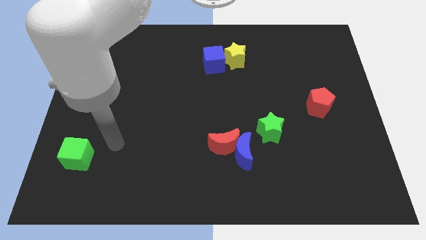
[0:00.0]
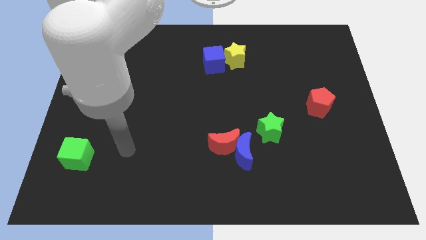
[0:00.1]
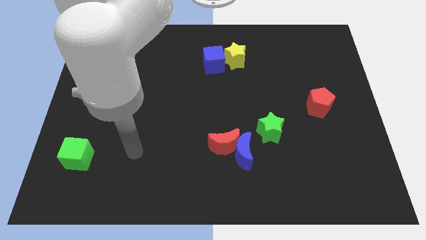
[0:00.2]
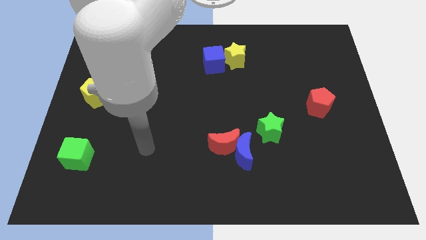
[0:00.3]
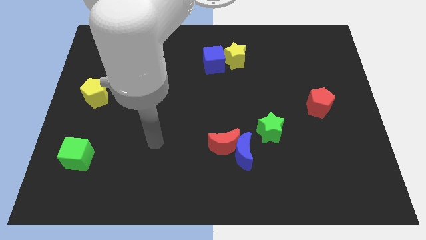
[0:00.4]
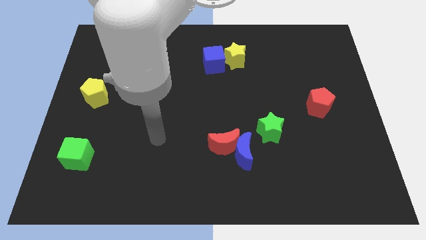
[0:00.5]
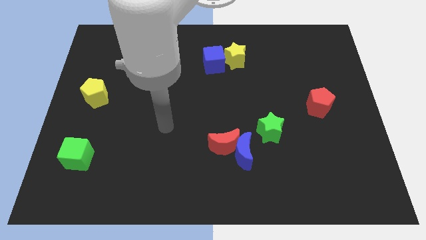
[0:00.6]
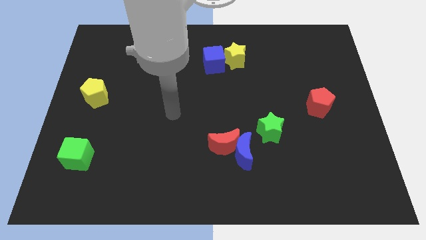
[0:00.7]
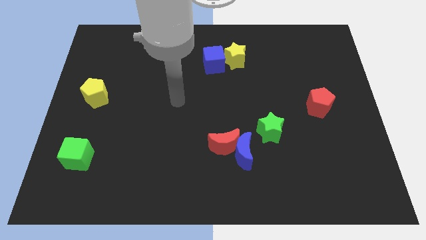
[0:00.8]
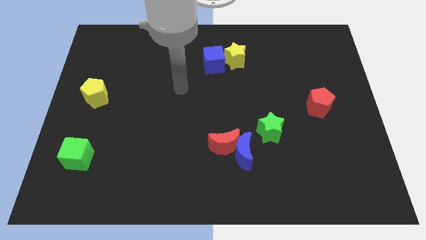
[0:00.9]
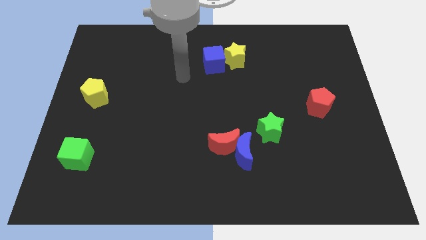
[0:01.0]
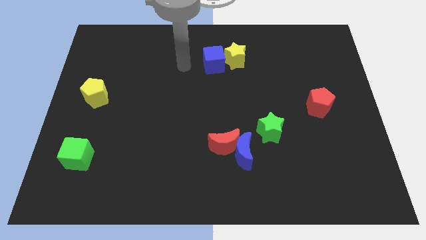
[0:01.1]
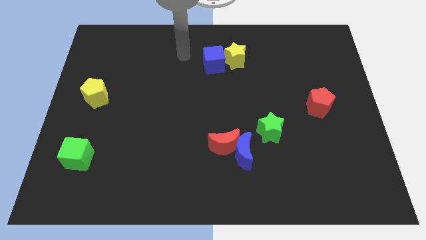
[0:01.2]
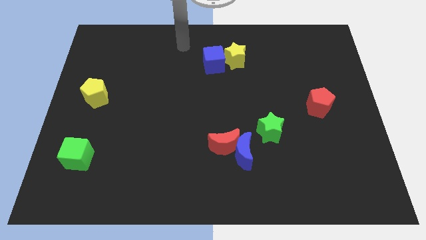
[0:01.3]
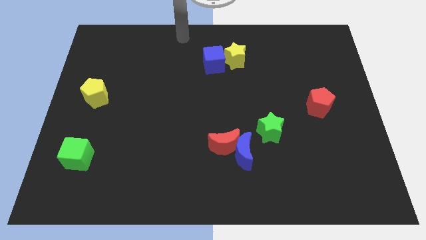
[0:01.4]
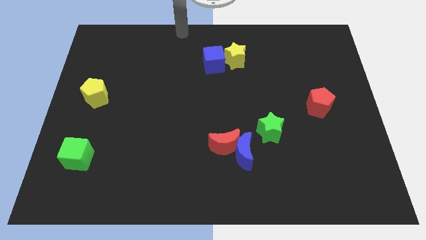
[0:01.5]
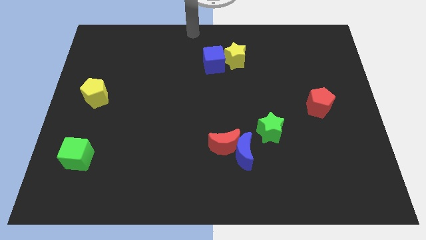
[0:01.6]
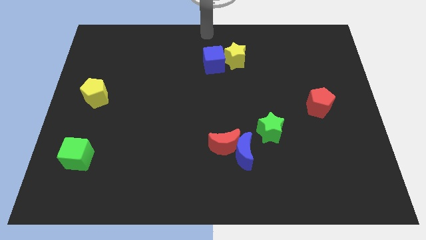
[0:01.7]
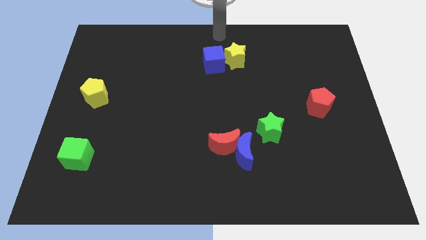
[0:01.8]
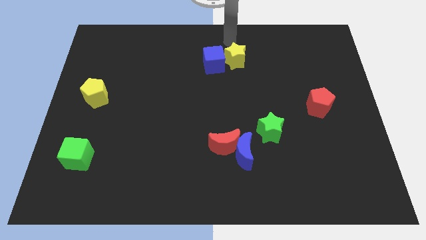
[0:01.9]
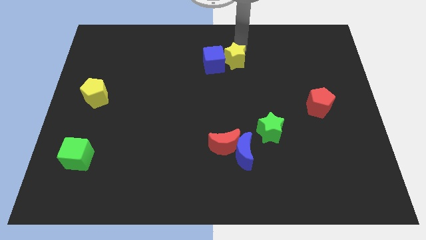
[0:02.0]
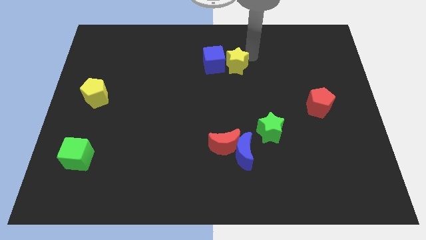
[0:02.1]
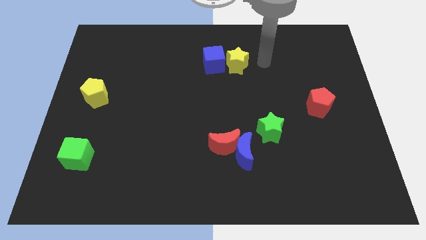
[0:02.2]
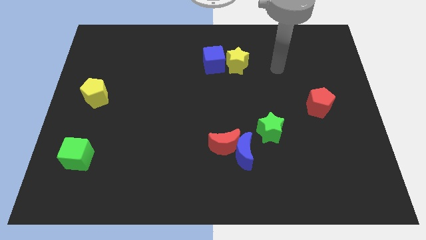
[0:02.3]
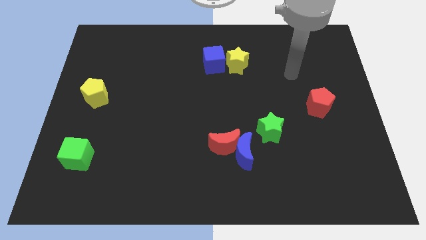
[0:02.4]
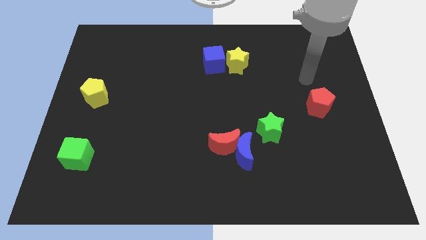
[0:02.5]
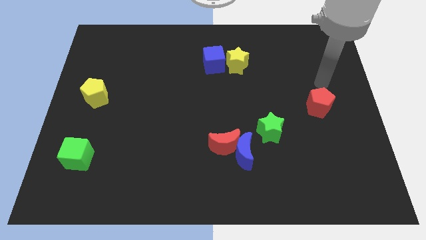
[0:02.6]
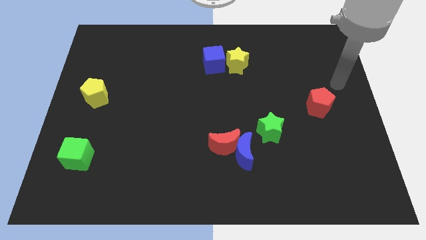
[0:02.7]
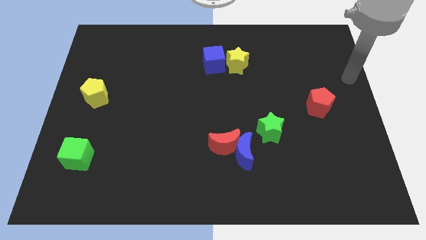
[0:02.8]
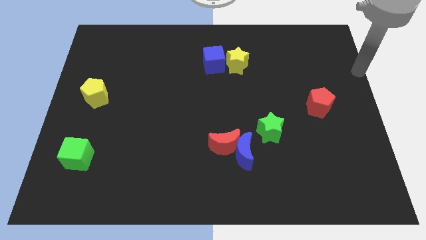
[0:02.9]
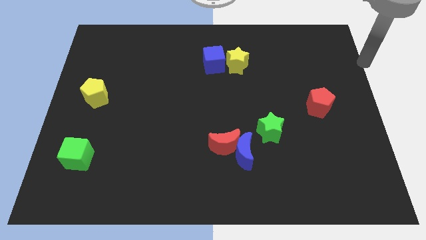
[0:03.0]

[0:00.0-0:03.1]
tap on the yellow star

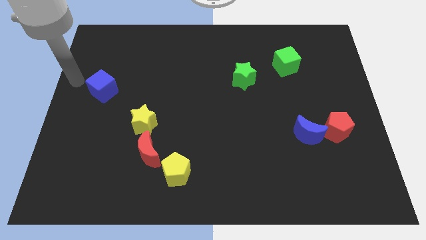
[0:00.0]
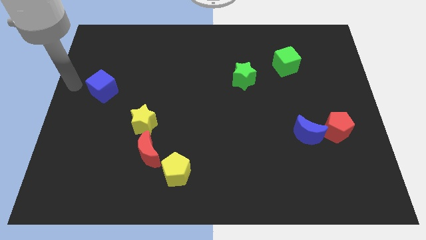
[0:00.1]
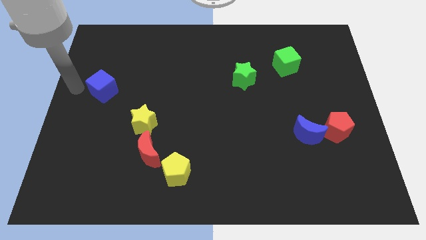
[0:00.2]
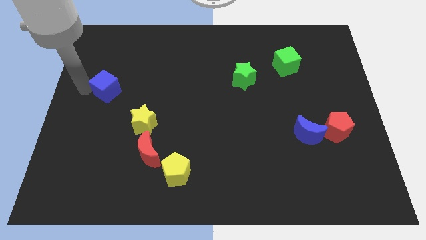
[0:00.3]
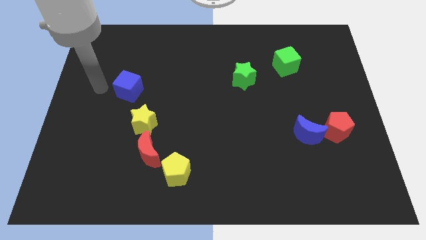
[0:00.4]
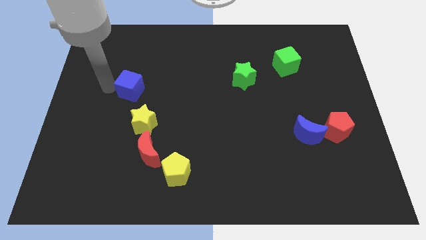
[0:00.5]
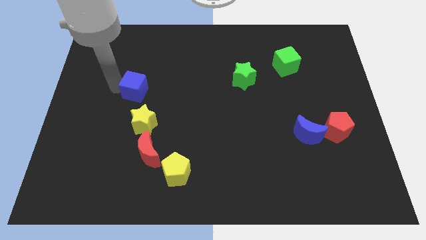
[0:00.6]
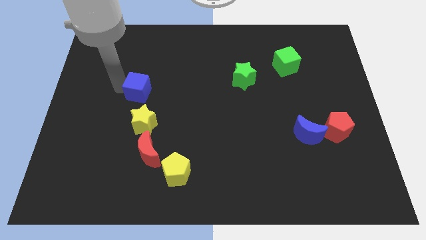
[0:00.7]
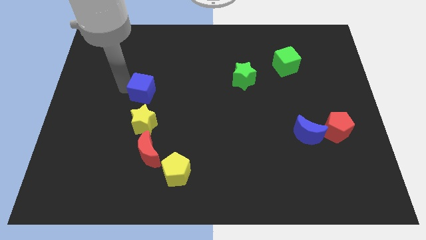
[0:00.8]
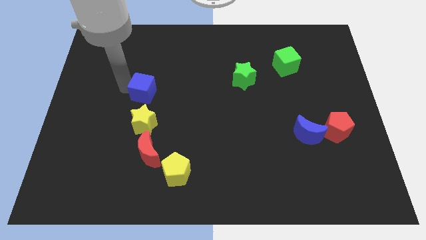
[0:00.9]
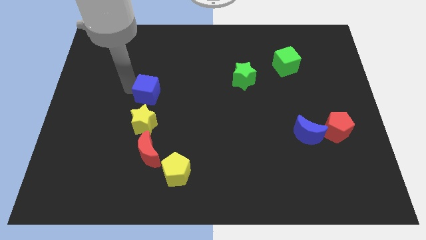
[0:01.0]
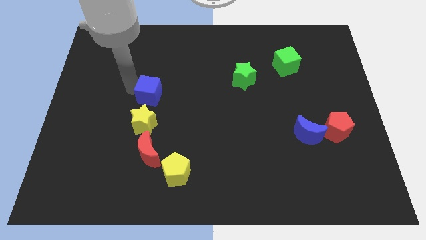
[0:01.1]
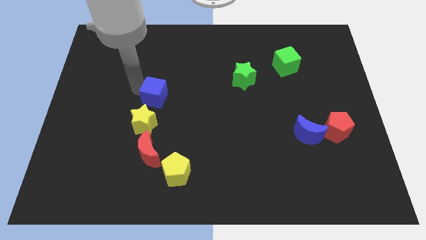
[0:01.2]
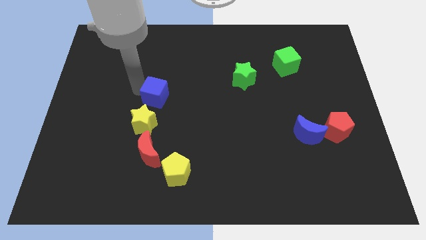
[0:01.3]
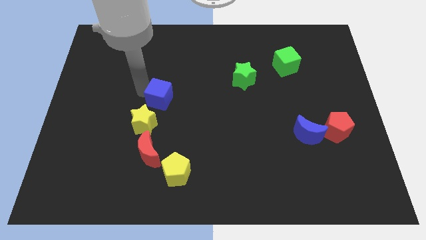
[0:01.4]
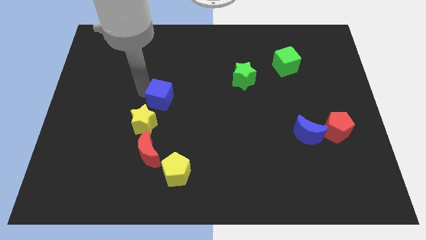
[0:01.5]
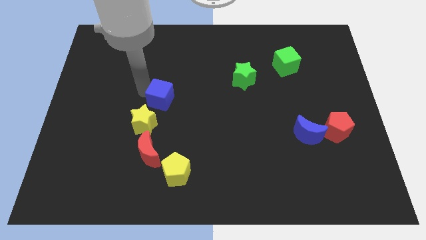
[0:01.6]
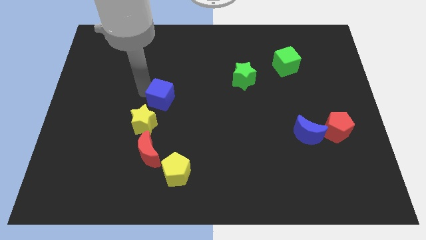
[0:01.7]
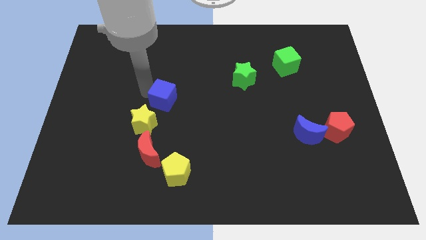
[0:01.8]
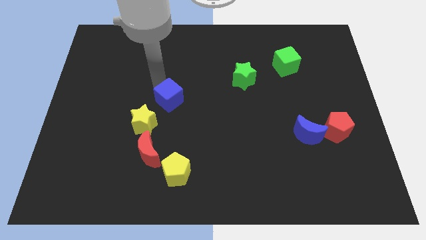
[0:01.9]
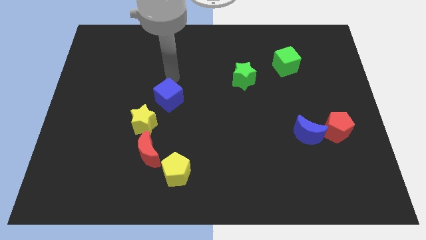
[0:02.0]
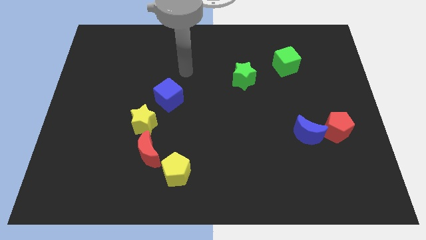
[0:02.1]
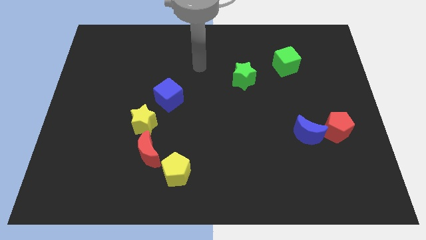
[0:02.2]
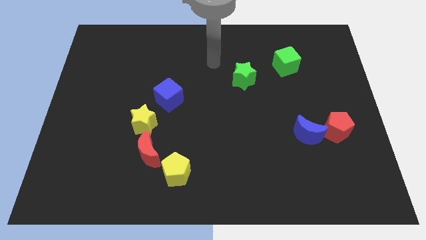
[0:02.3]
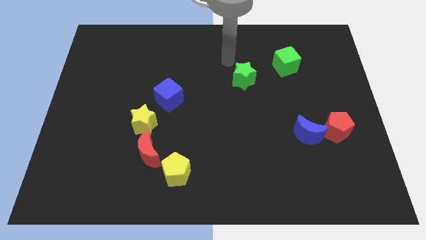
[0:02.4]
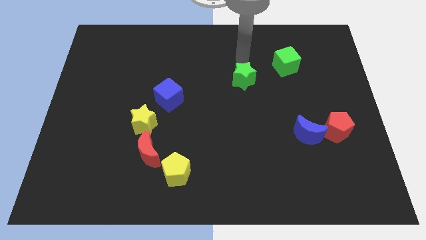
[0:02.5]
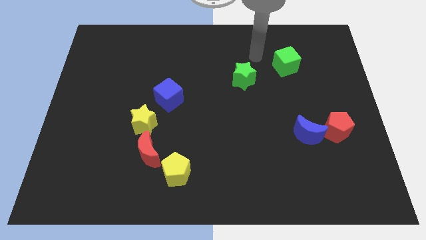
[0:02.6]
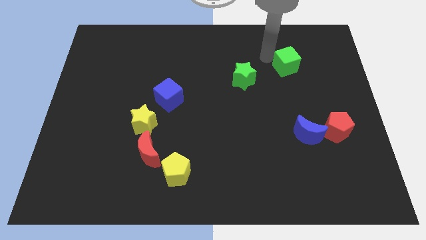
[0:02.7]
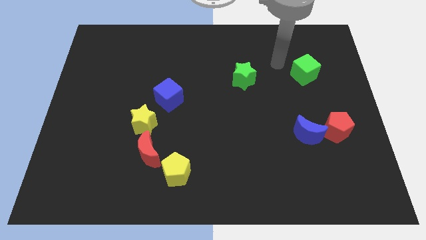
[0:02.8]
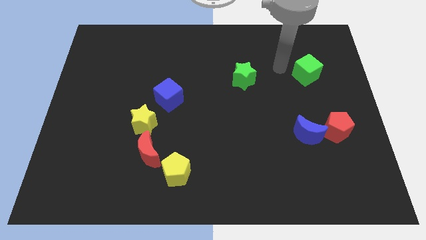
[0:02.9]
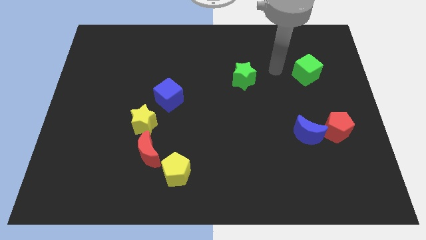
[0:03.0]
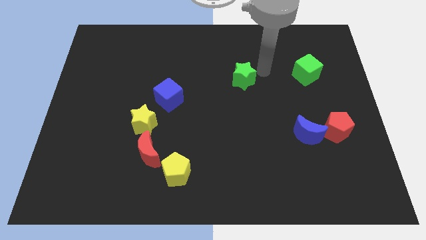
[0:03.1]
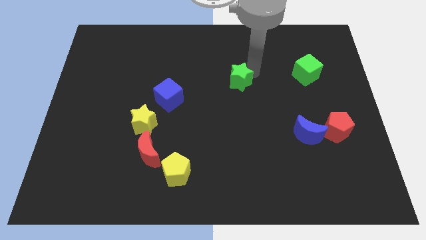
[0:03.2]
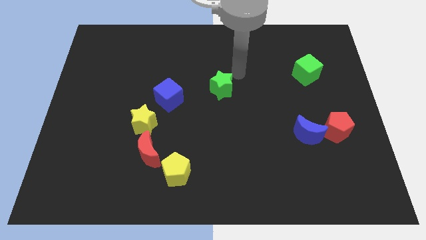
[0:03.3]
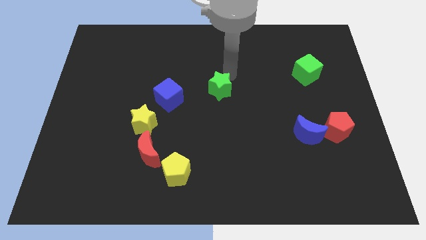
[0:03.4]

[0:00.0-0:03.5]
push the blue cube towards the top right side of the yellow star

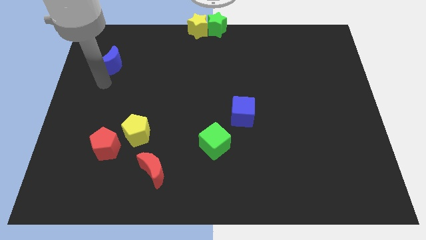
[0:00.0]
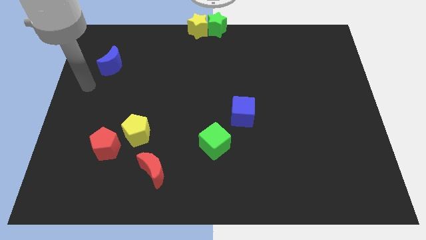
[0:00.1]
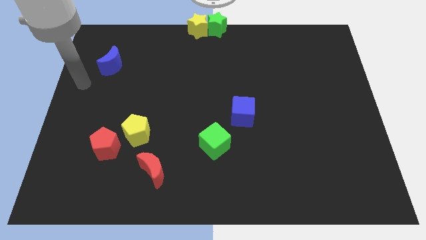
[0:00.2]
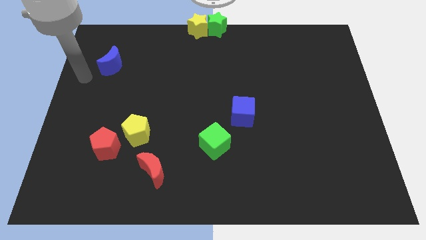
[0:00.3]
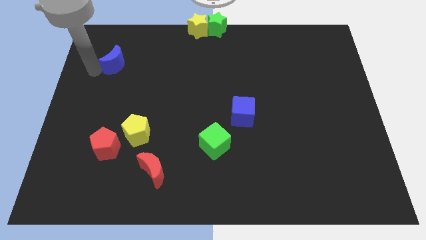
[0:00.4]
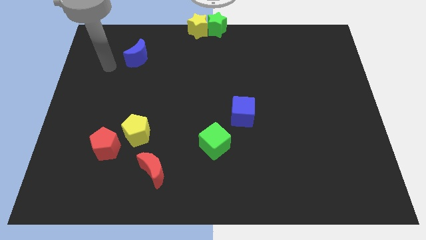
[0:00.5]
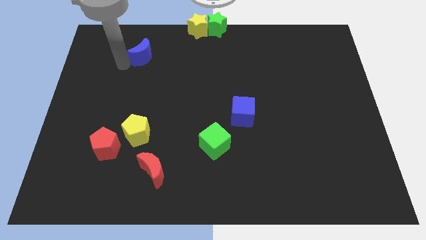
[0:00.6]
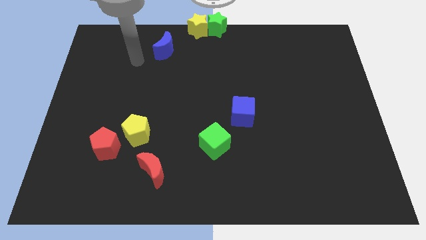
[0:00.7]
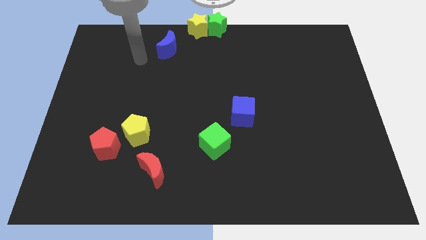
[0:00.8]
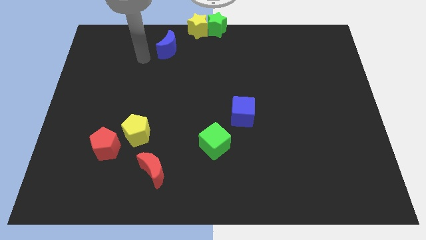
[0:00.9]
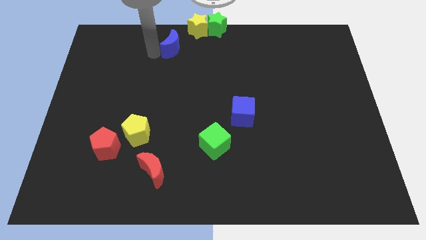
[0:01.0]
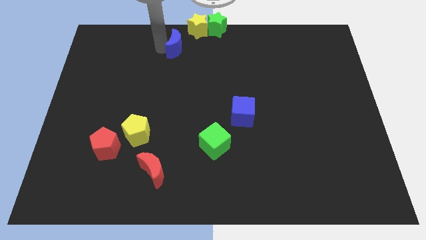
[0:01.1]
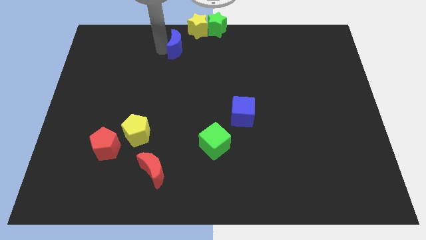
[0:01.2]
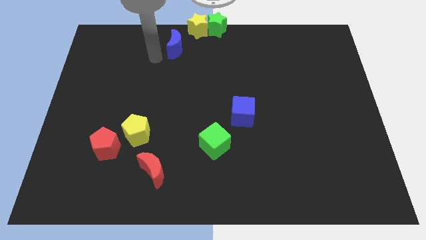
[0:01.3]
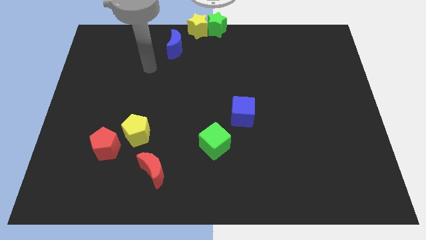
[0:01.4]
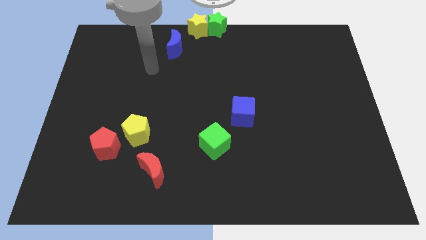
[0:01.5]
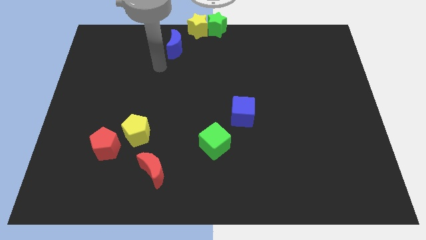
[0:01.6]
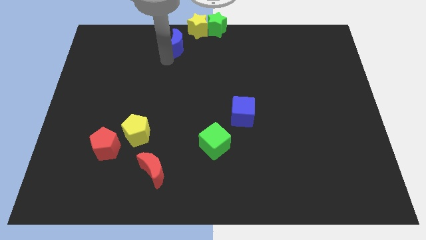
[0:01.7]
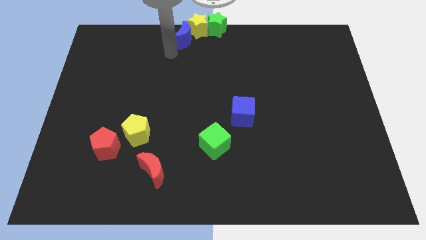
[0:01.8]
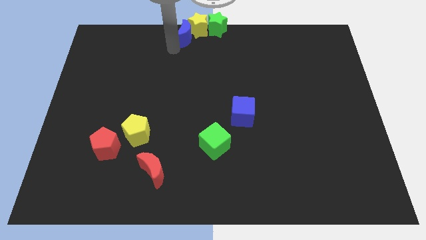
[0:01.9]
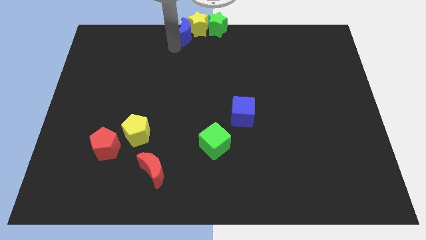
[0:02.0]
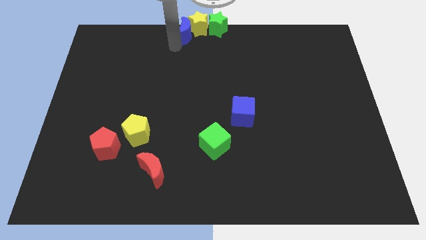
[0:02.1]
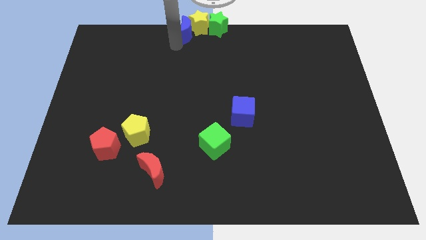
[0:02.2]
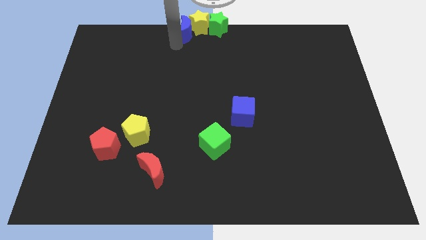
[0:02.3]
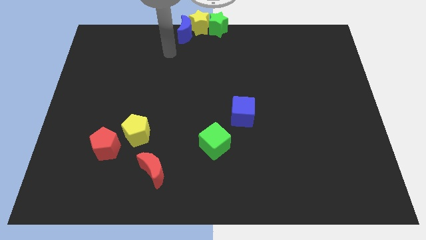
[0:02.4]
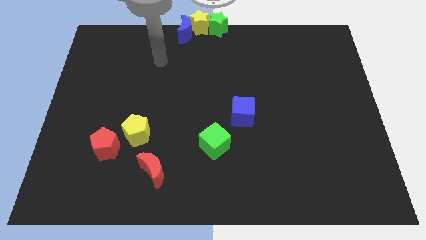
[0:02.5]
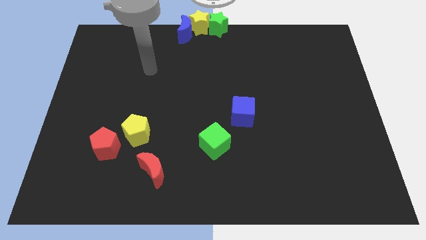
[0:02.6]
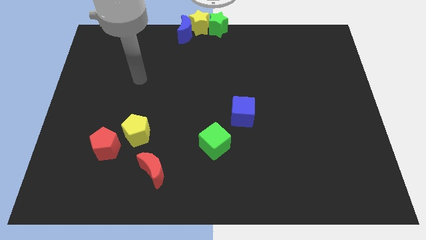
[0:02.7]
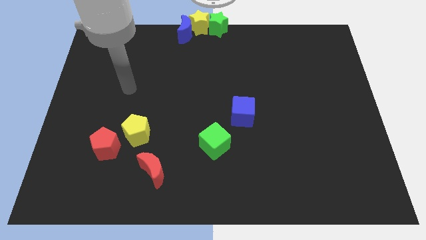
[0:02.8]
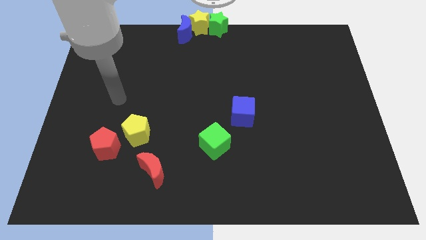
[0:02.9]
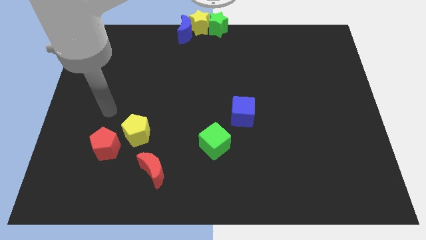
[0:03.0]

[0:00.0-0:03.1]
move blue moon close to the yellow star middle of the board
